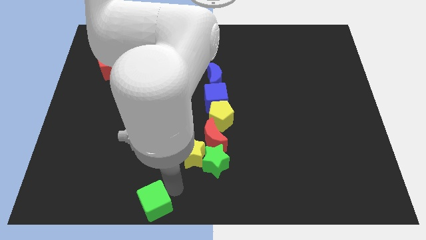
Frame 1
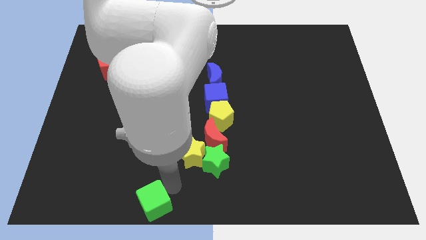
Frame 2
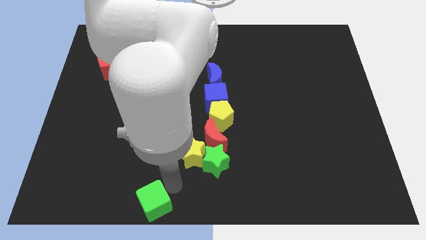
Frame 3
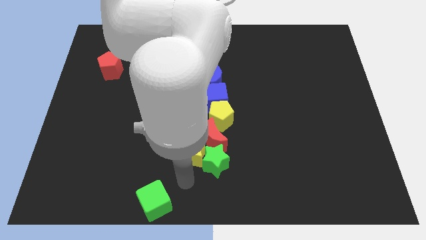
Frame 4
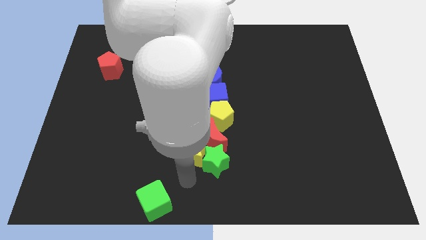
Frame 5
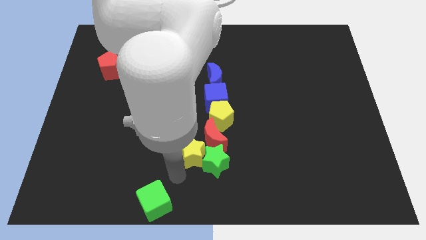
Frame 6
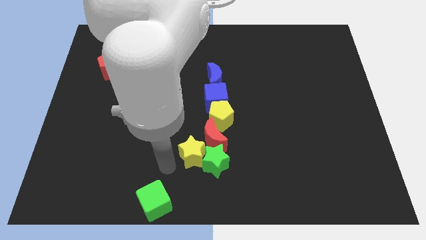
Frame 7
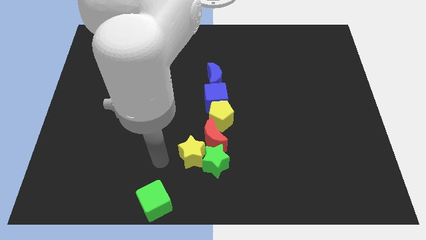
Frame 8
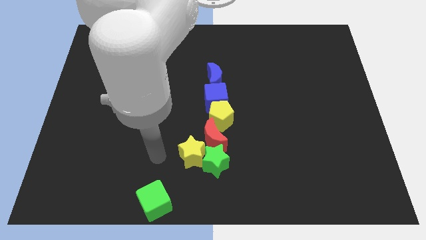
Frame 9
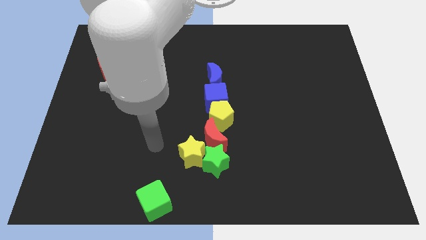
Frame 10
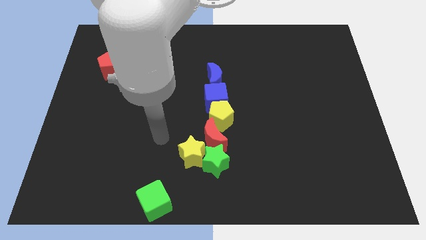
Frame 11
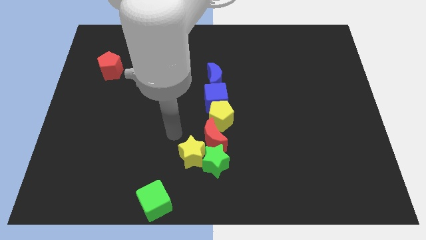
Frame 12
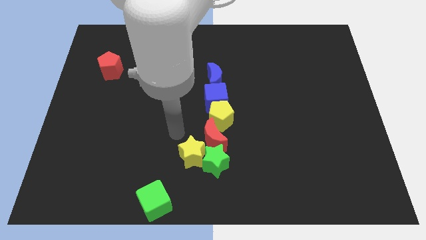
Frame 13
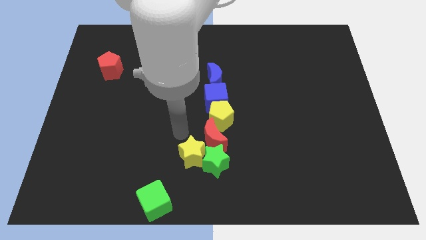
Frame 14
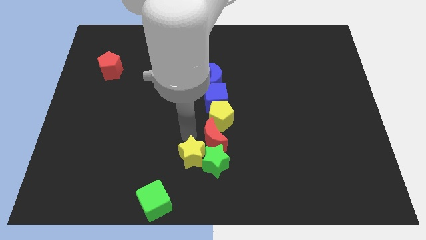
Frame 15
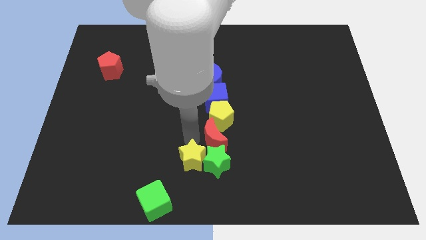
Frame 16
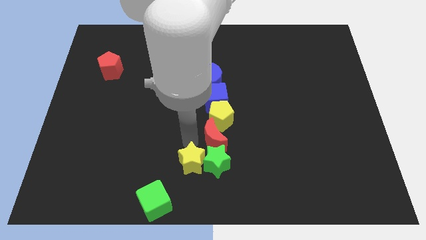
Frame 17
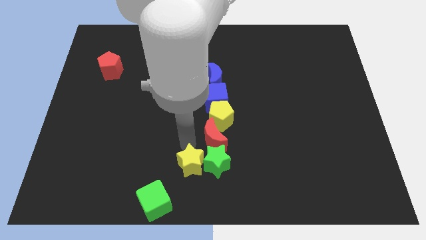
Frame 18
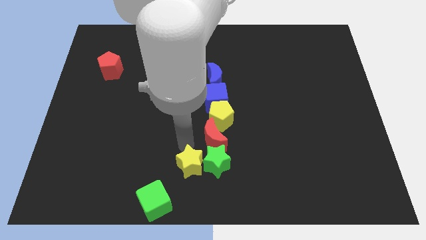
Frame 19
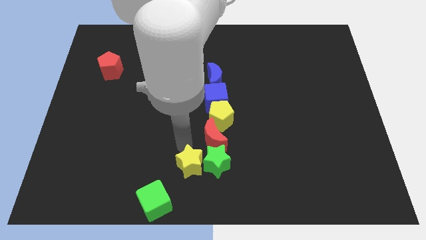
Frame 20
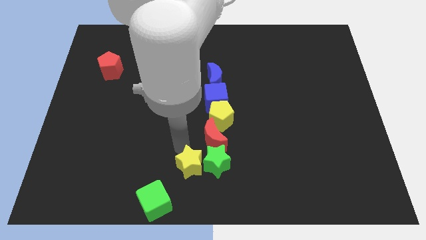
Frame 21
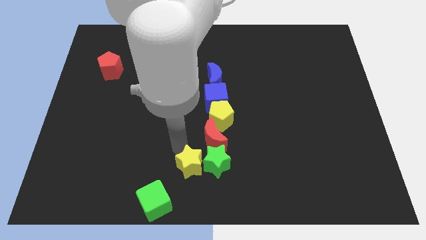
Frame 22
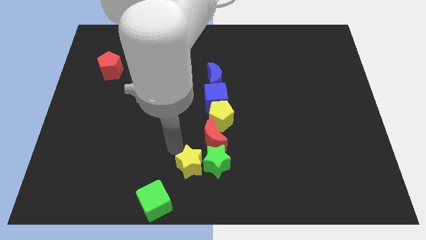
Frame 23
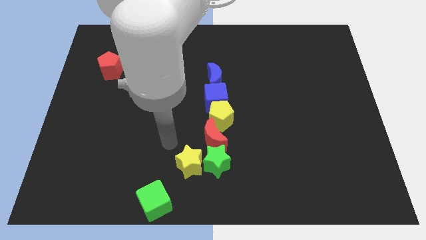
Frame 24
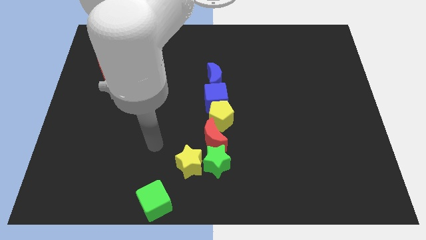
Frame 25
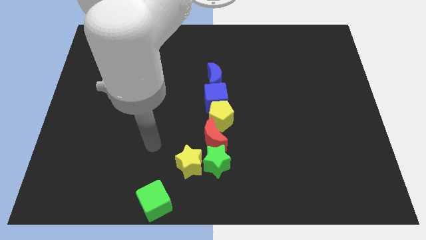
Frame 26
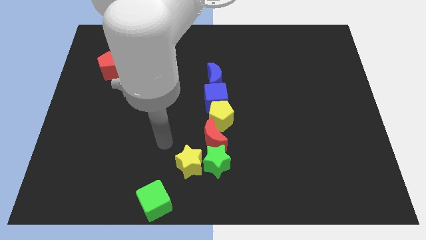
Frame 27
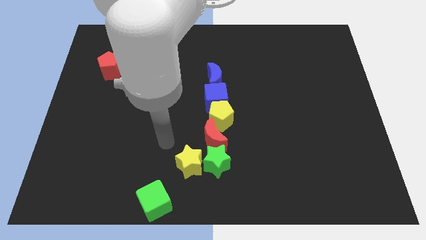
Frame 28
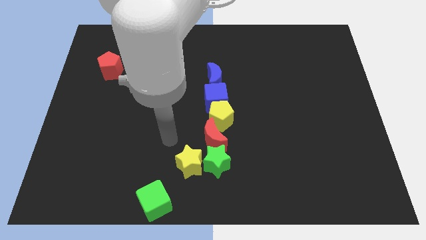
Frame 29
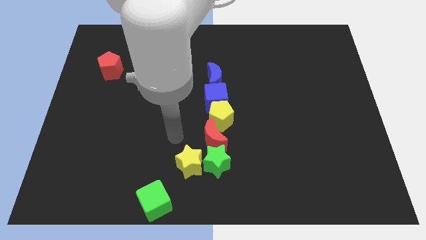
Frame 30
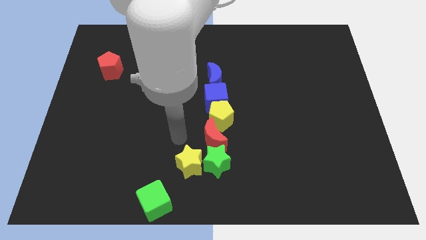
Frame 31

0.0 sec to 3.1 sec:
adjust the yellow star to the left of the green star

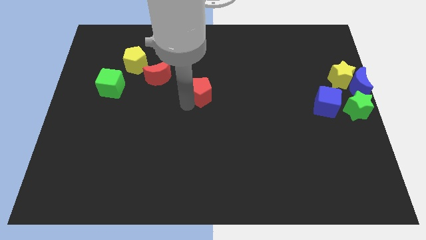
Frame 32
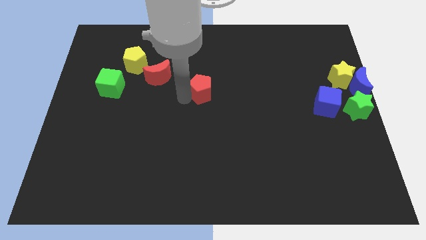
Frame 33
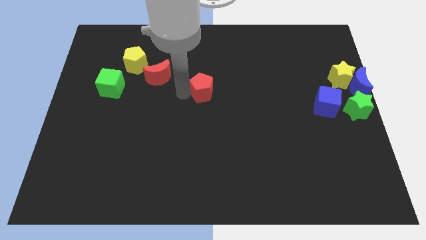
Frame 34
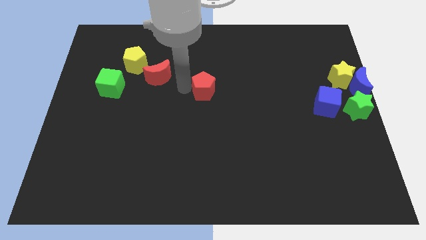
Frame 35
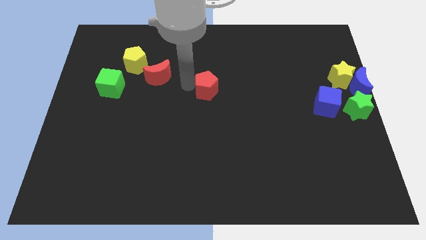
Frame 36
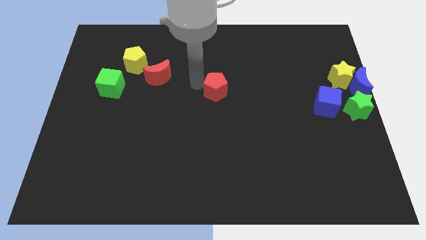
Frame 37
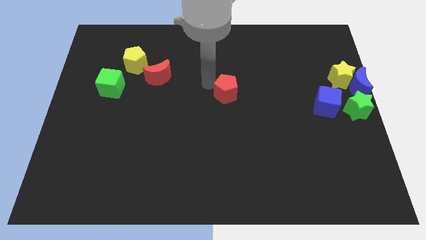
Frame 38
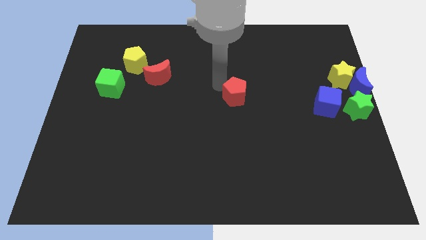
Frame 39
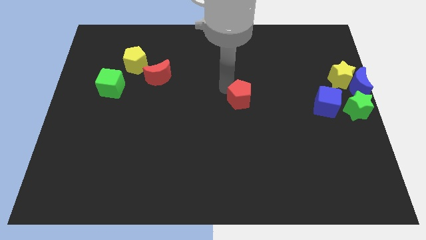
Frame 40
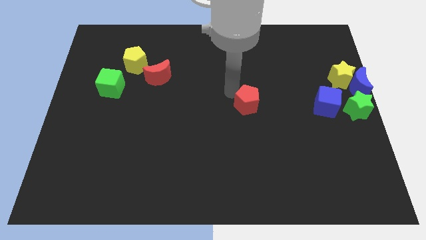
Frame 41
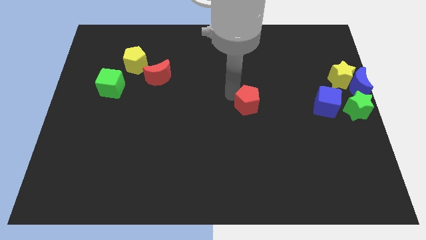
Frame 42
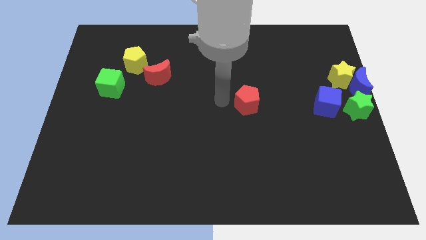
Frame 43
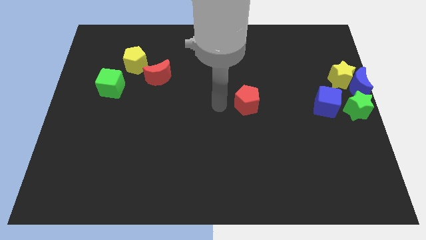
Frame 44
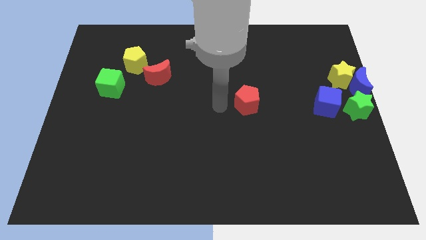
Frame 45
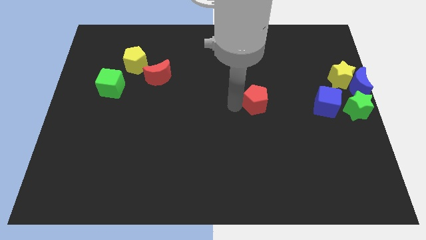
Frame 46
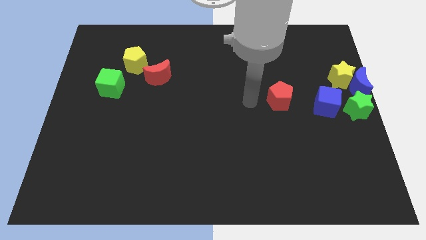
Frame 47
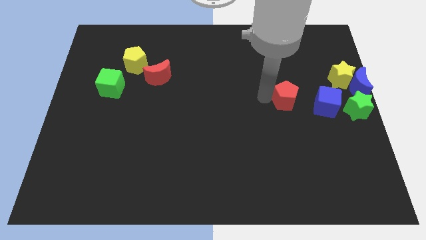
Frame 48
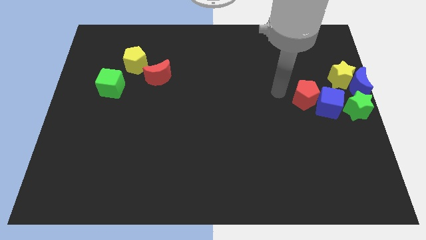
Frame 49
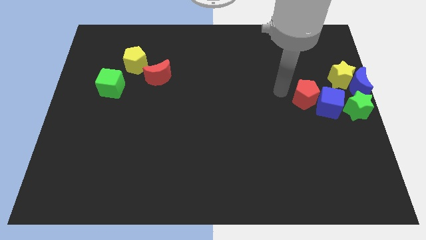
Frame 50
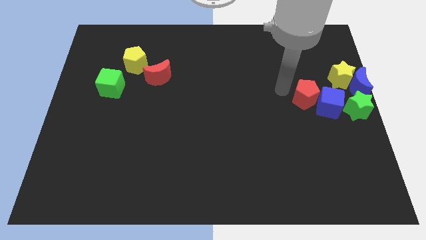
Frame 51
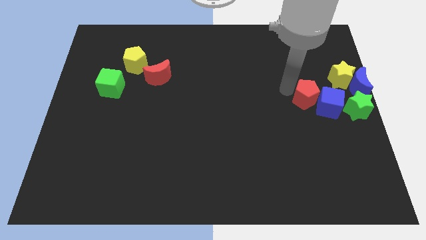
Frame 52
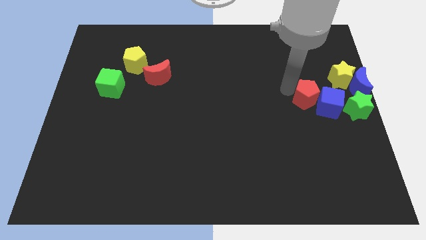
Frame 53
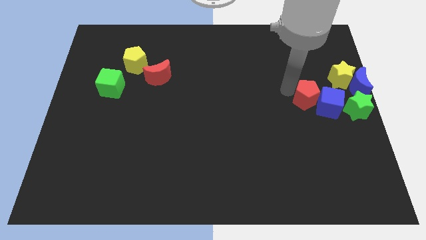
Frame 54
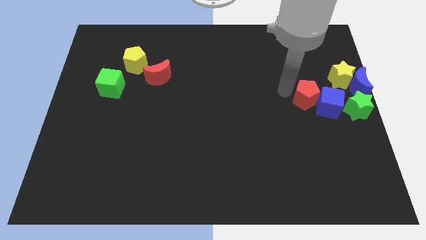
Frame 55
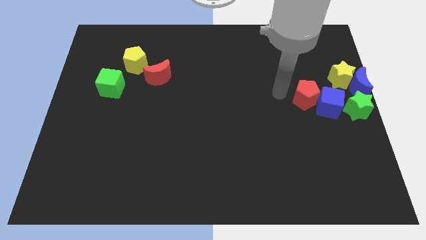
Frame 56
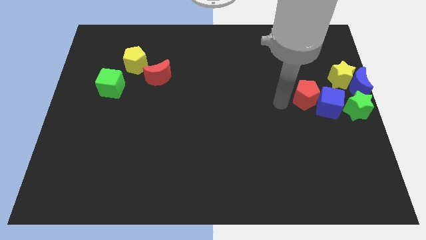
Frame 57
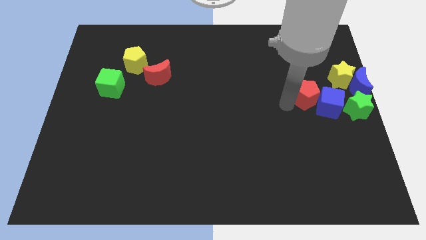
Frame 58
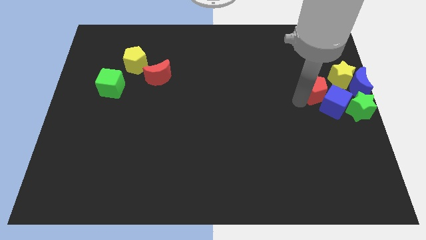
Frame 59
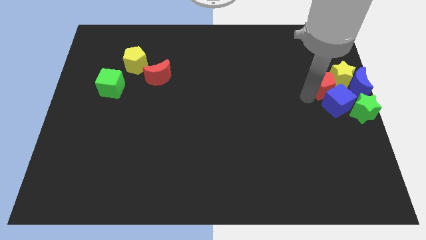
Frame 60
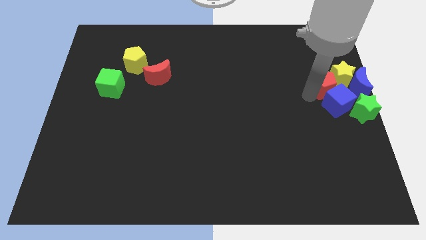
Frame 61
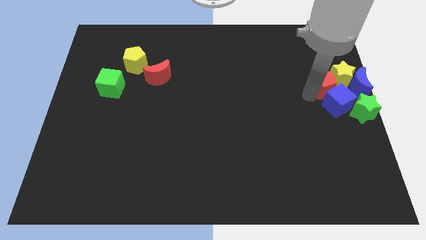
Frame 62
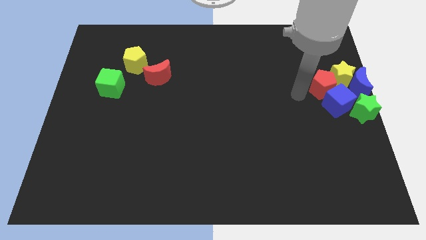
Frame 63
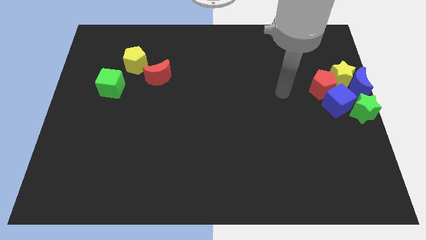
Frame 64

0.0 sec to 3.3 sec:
push the red pentagon to the left side of the yellow star

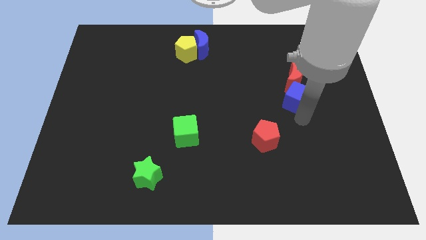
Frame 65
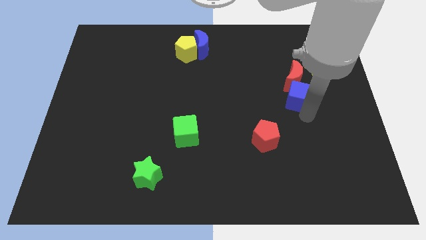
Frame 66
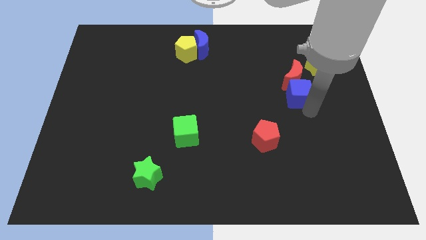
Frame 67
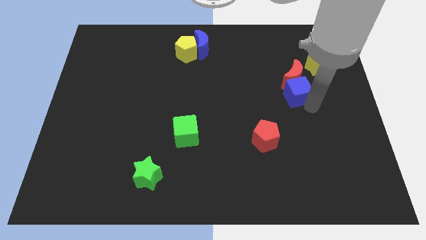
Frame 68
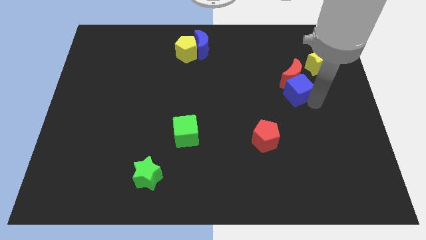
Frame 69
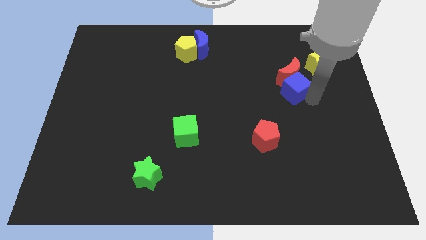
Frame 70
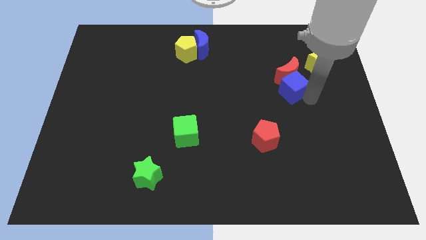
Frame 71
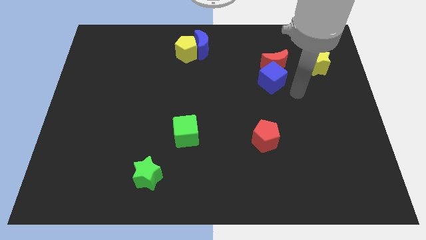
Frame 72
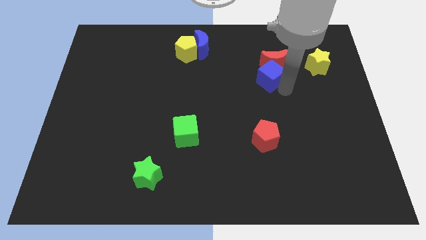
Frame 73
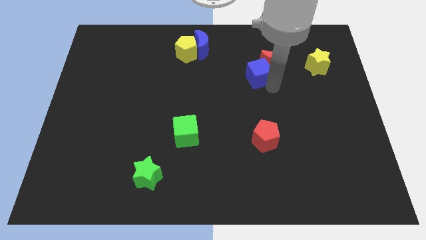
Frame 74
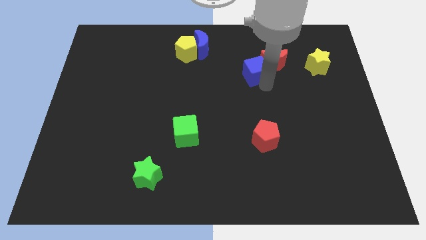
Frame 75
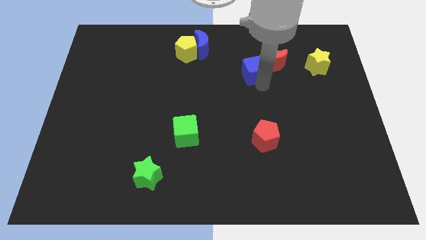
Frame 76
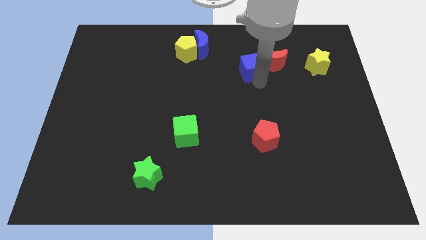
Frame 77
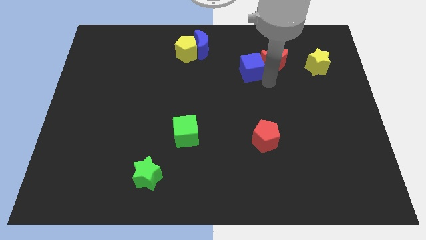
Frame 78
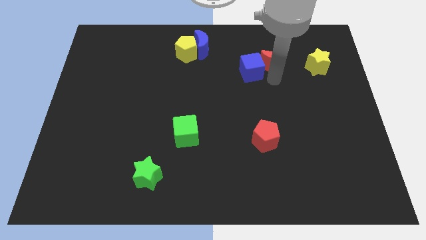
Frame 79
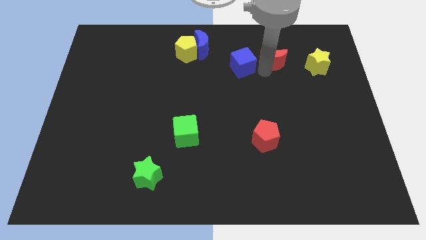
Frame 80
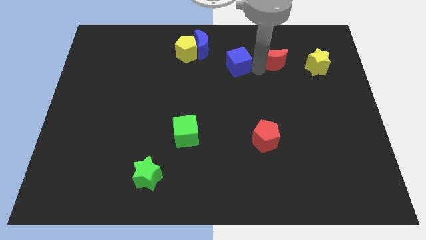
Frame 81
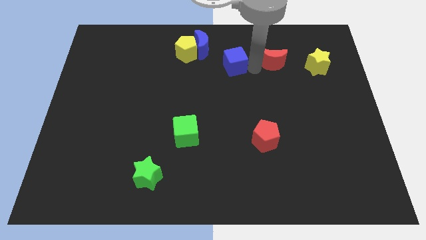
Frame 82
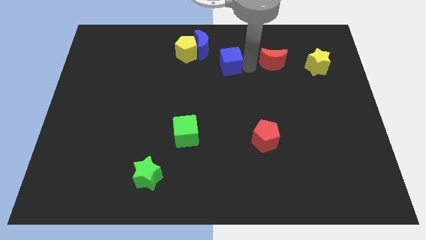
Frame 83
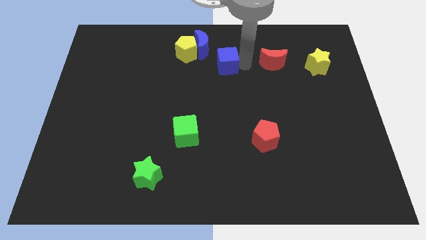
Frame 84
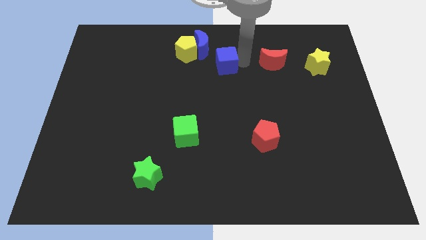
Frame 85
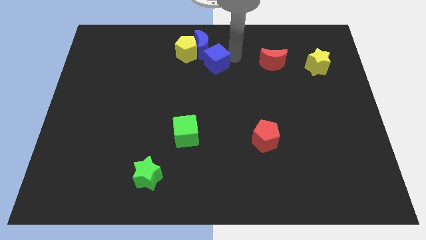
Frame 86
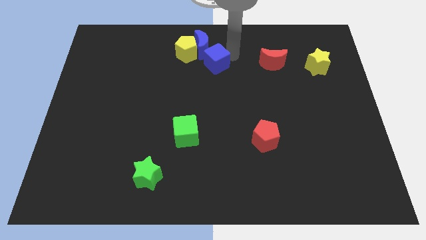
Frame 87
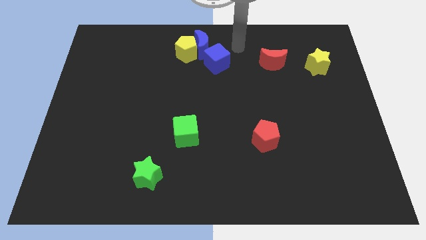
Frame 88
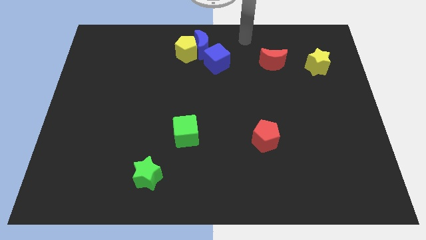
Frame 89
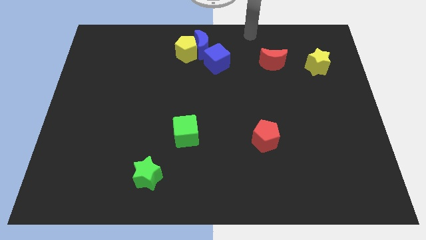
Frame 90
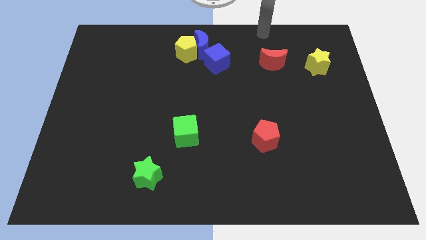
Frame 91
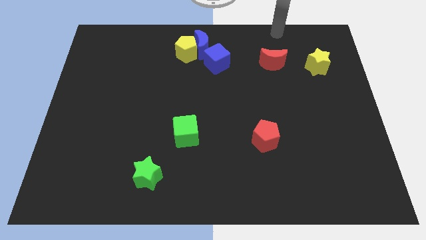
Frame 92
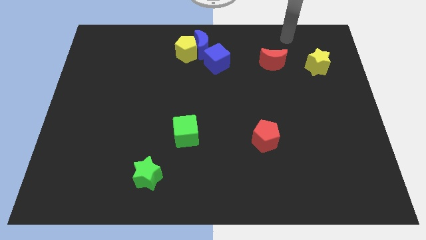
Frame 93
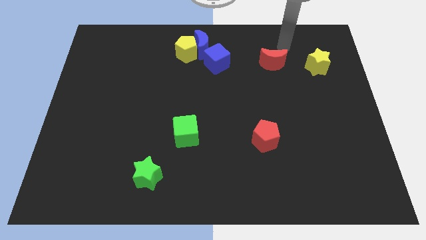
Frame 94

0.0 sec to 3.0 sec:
push the blue cube into the blue crescent
